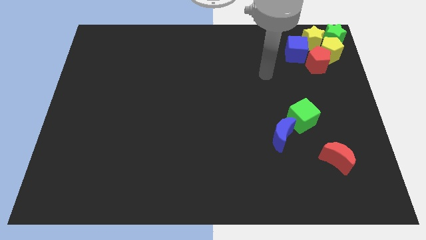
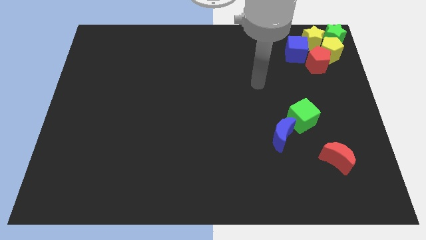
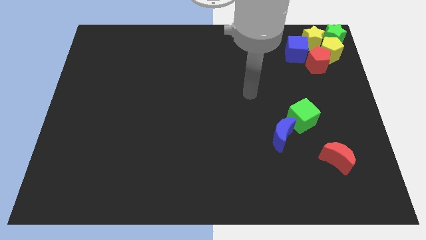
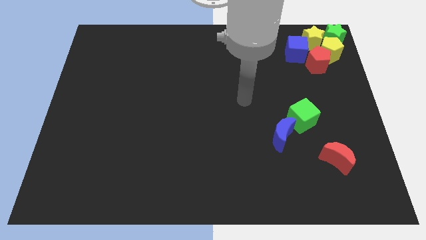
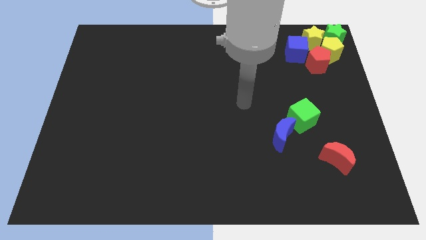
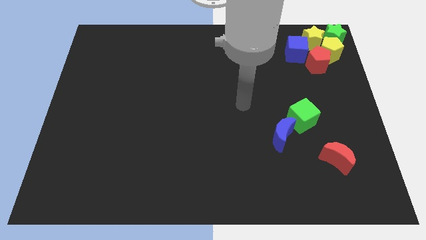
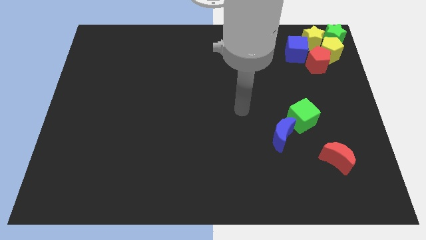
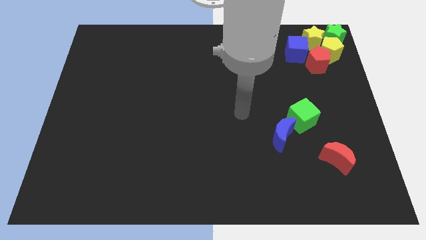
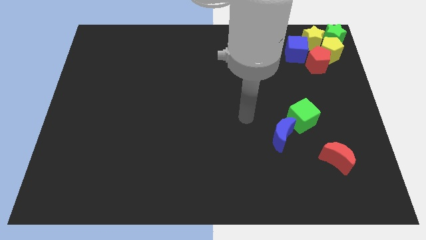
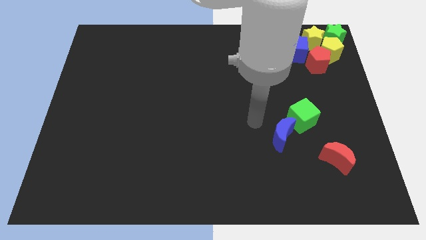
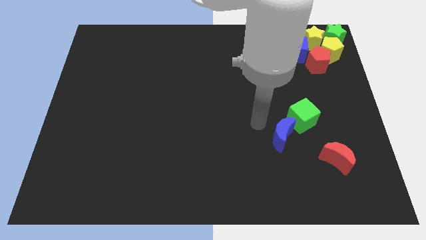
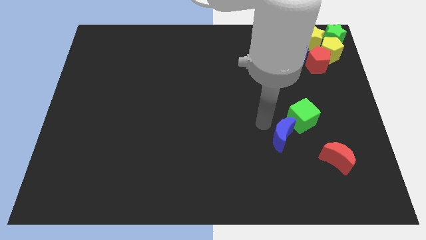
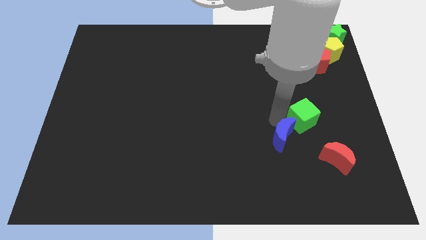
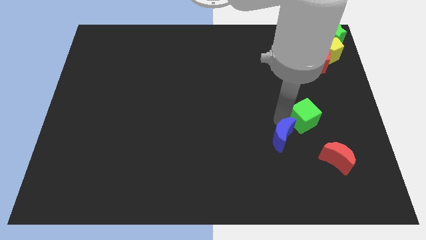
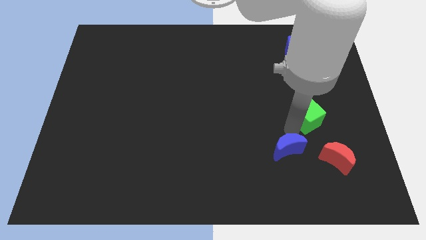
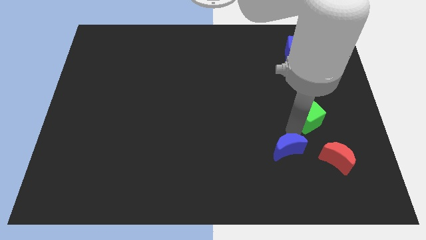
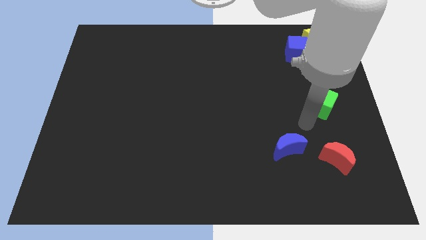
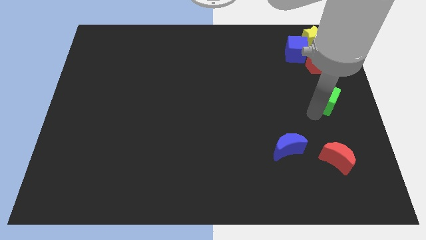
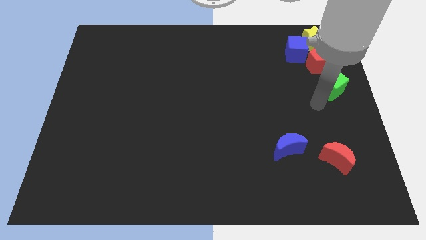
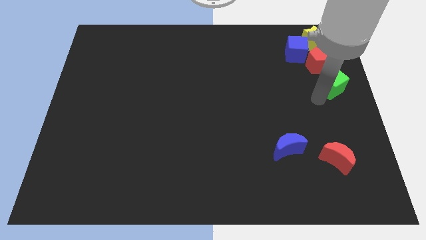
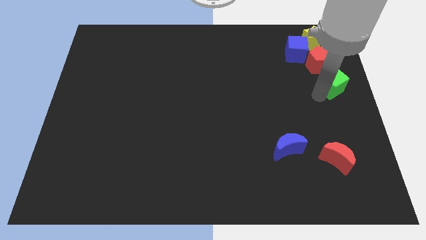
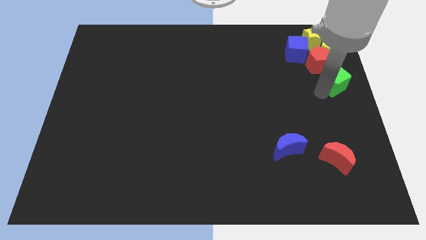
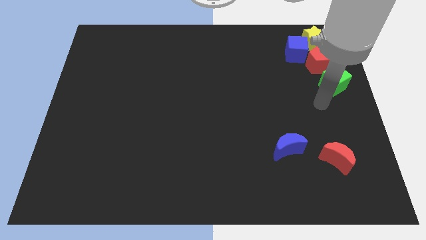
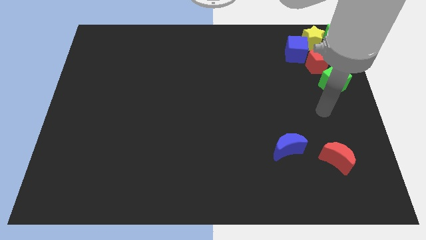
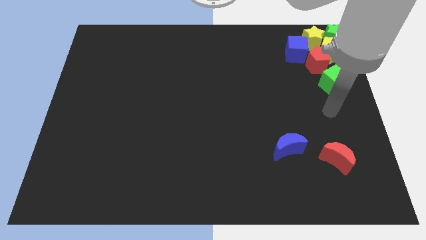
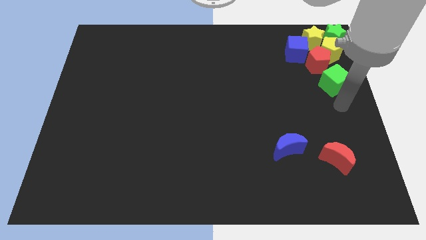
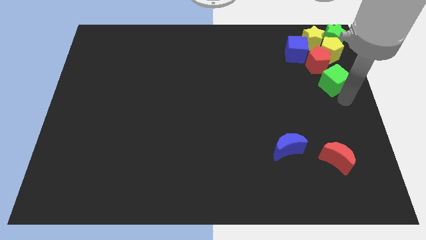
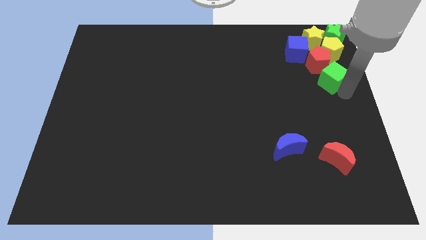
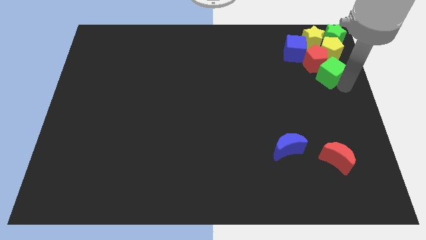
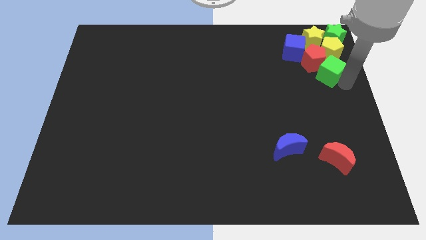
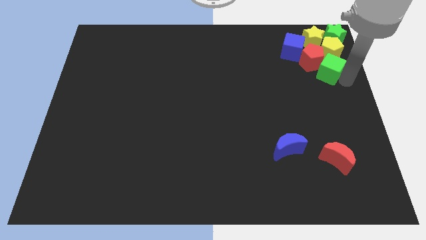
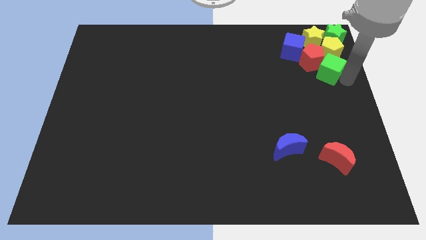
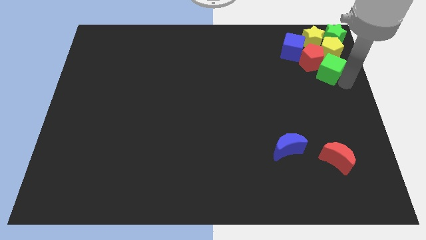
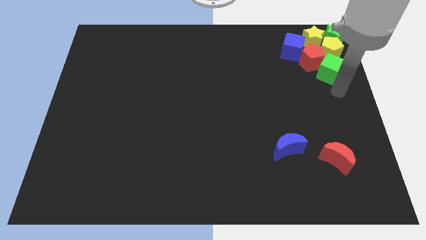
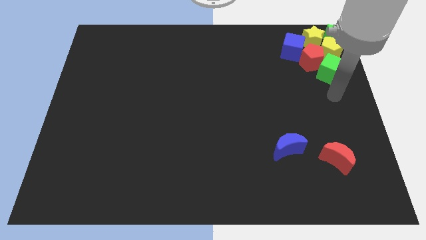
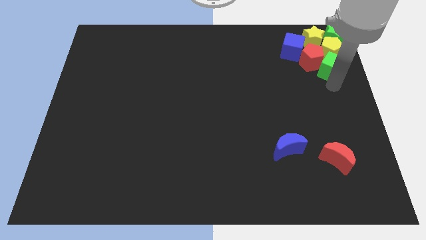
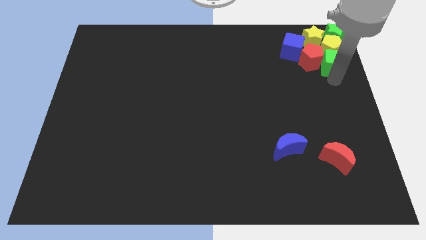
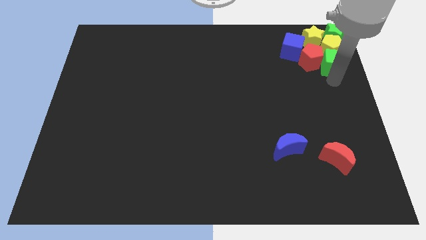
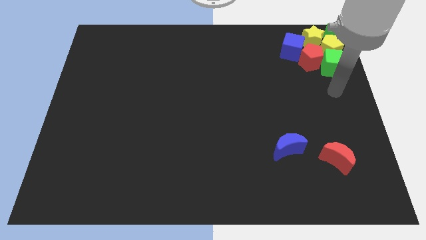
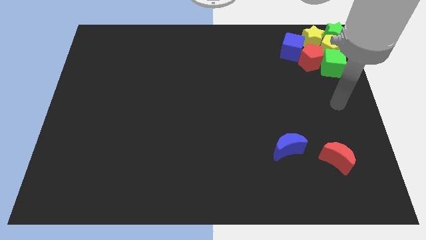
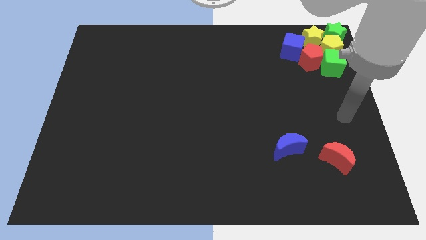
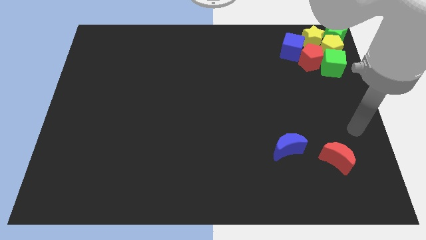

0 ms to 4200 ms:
push the green cube into the yellow pentagon

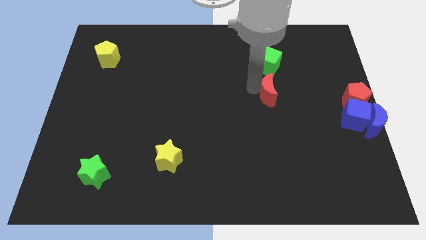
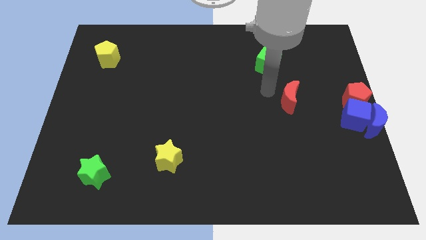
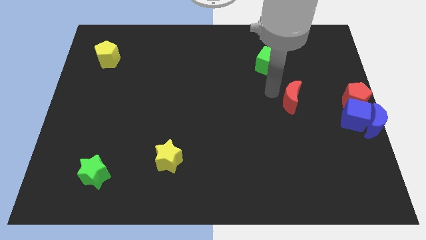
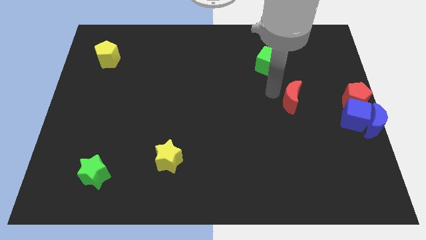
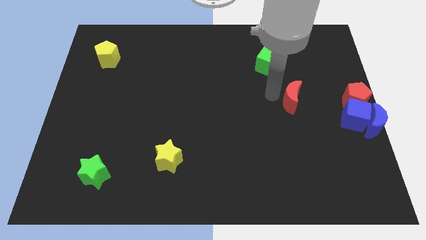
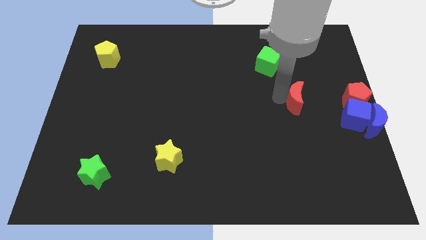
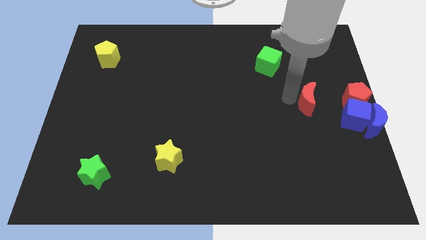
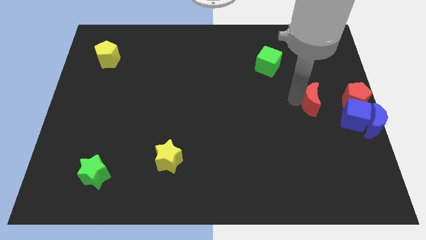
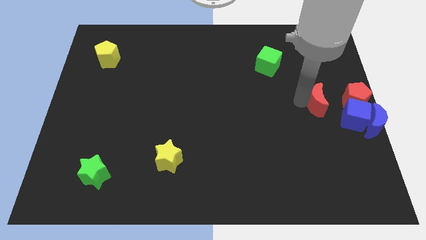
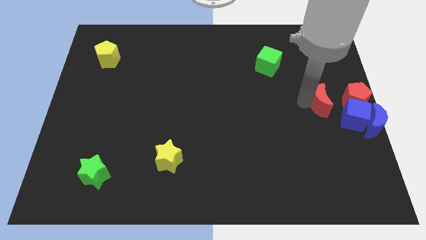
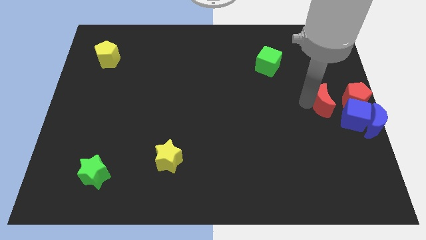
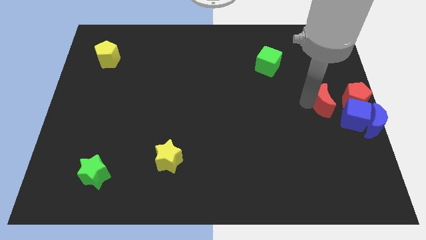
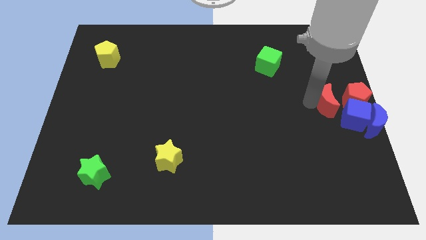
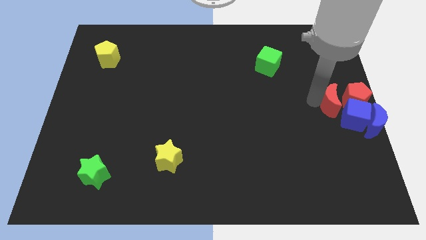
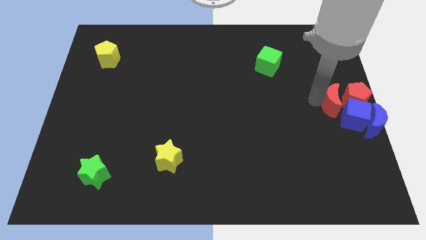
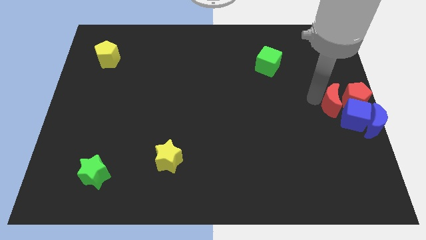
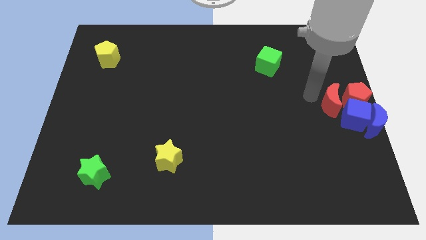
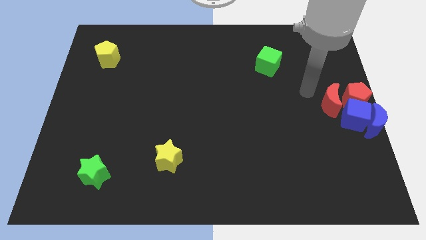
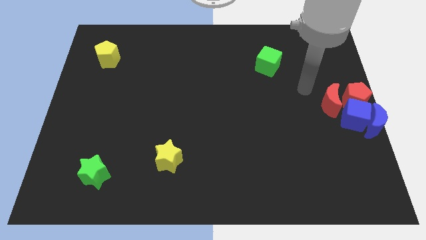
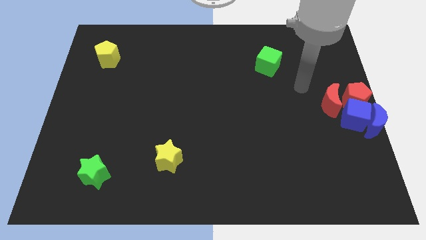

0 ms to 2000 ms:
slide the red moon close to the red pentagon

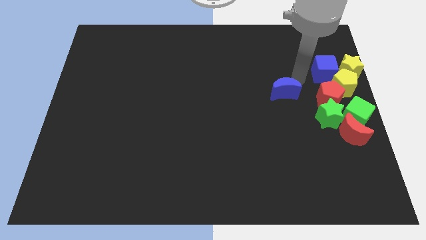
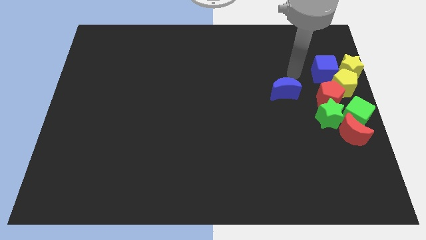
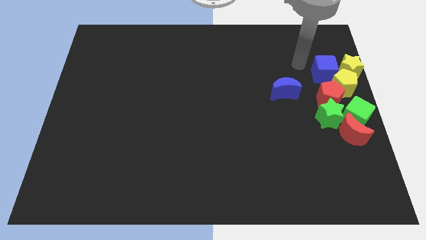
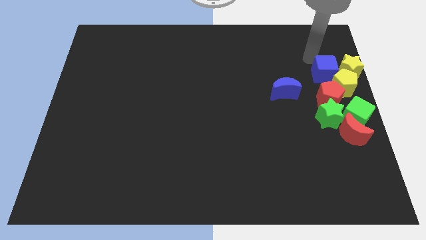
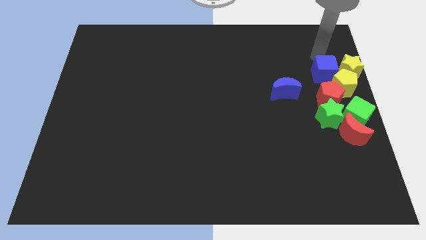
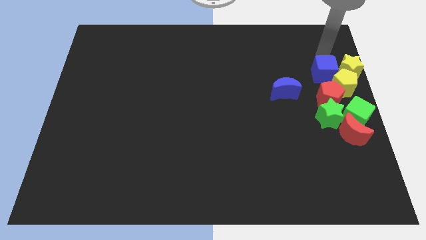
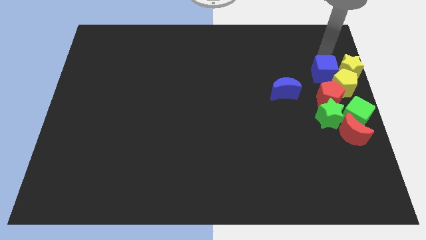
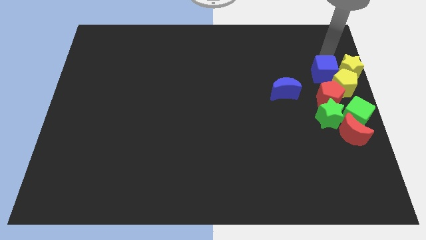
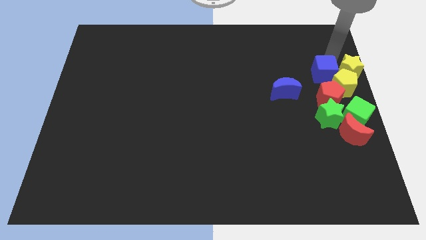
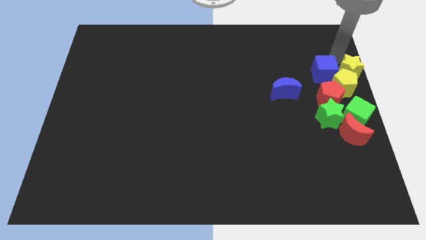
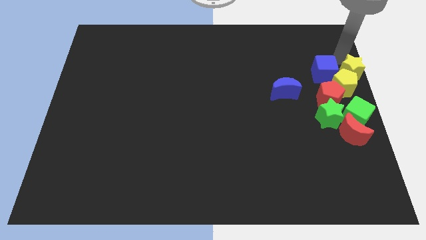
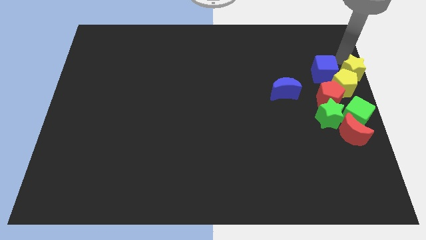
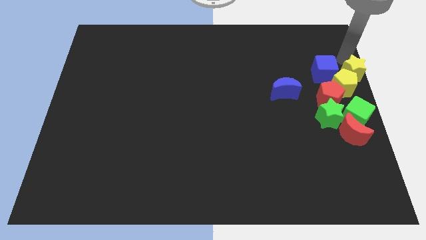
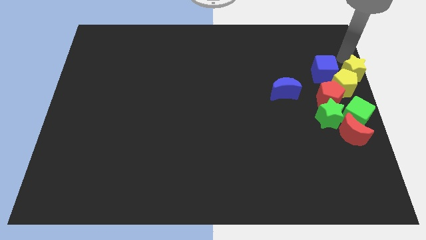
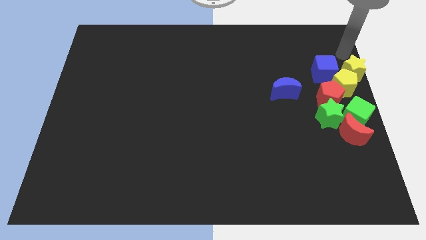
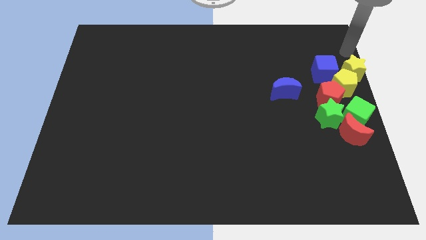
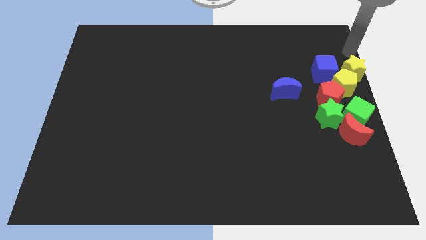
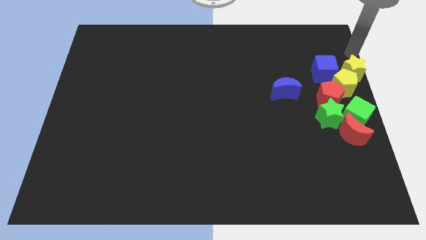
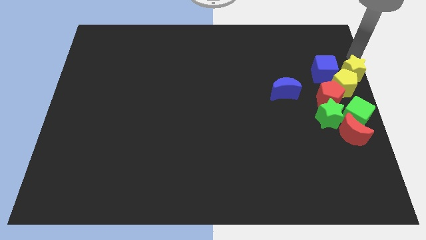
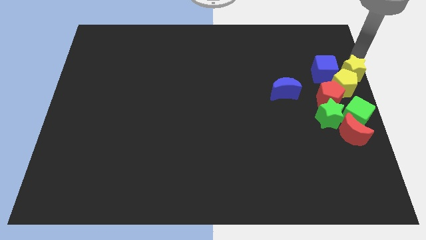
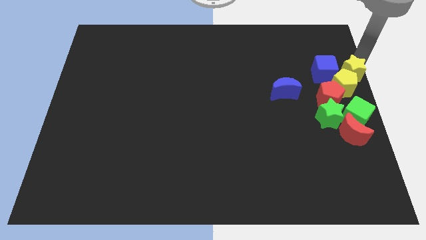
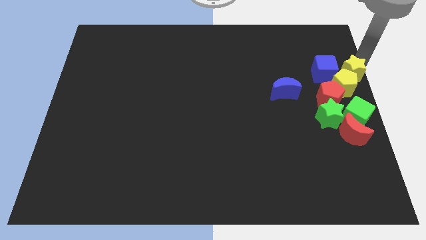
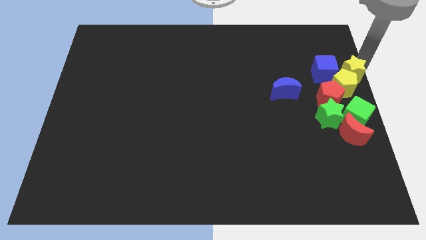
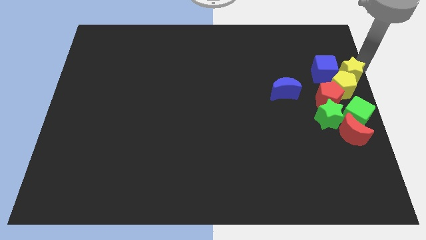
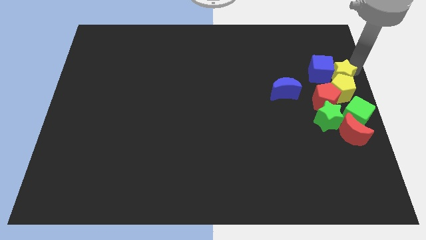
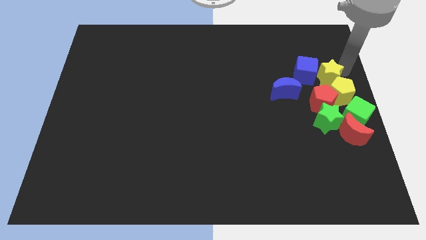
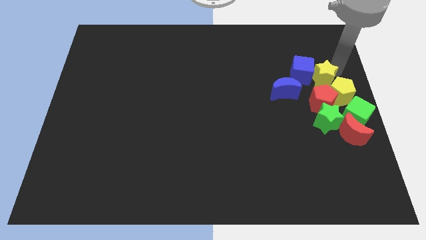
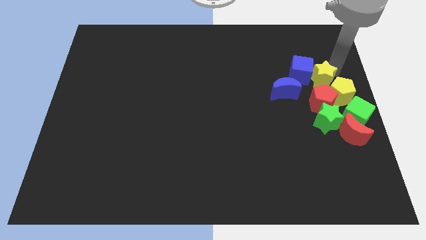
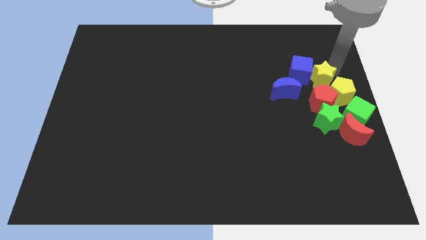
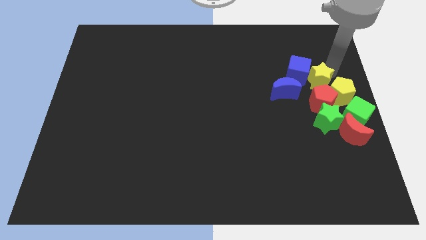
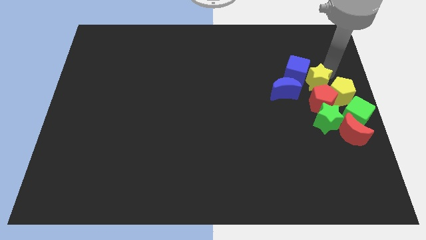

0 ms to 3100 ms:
place yellow star above red pentagon
